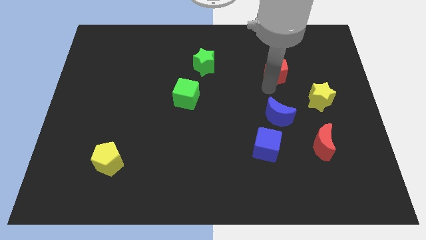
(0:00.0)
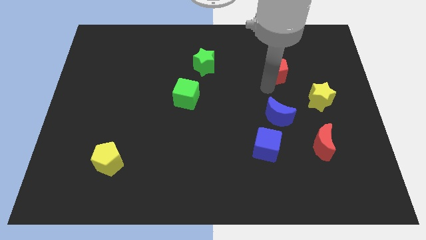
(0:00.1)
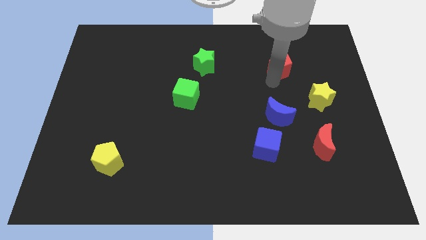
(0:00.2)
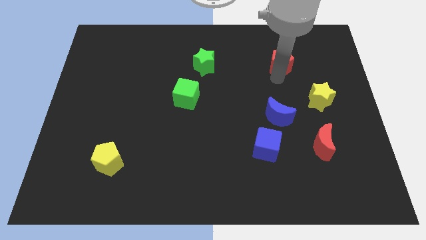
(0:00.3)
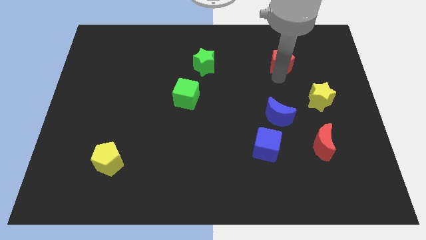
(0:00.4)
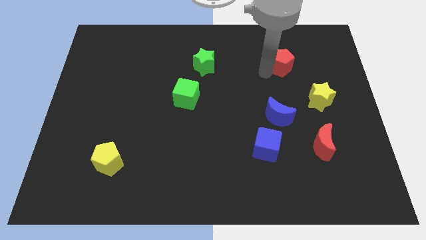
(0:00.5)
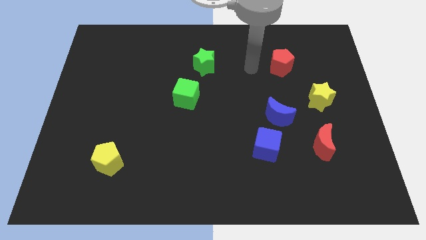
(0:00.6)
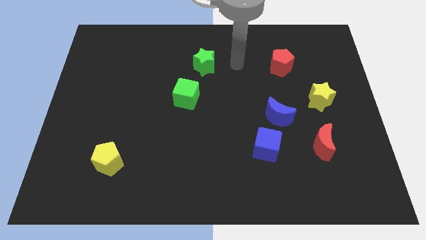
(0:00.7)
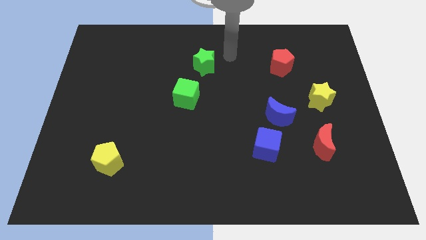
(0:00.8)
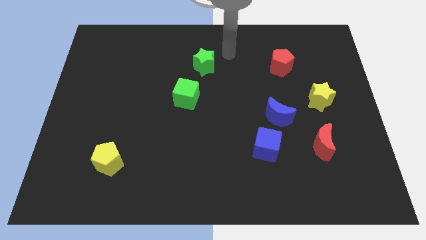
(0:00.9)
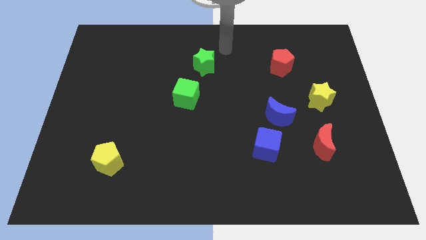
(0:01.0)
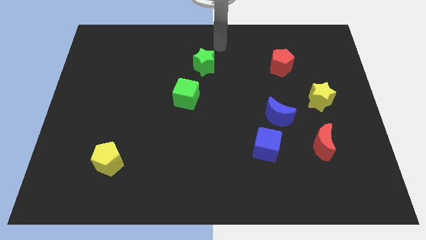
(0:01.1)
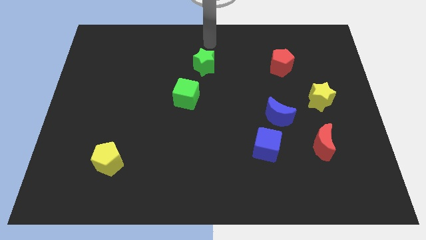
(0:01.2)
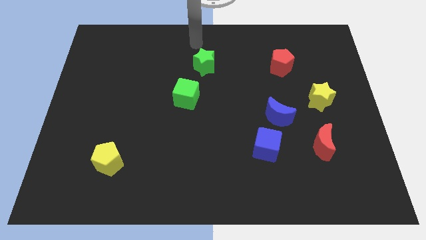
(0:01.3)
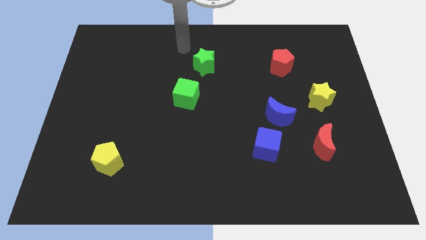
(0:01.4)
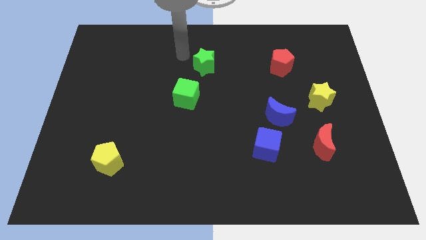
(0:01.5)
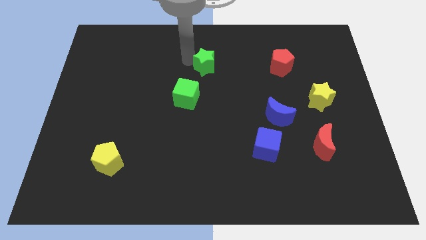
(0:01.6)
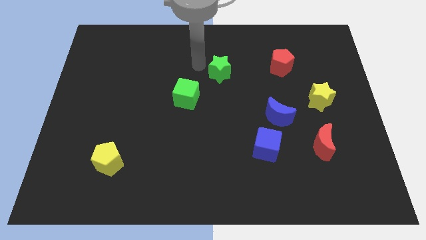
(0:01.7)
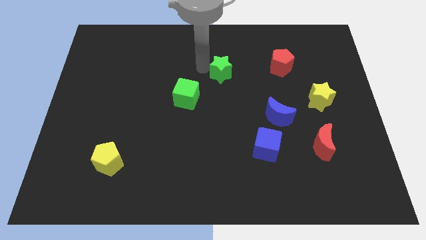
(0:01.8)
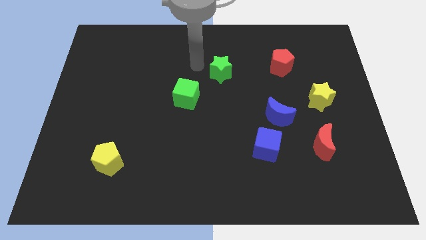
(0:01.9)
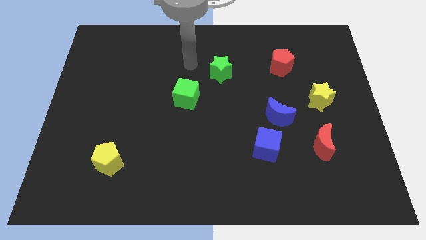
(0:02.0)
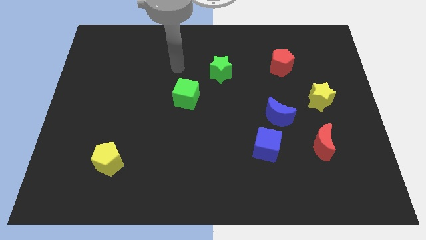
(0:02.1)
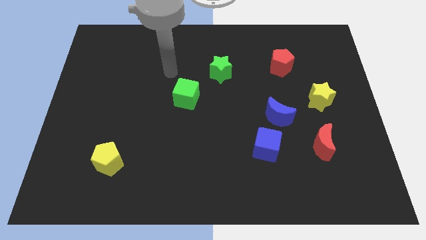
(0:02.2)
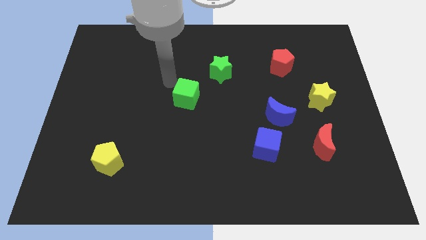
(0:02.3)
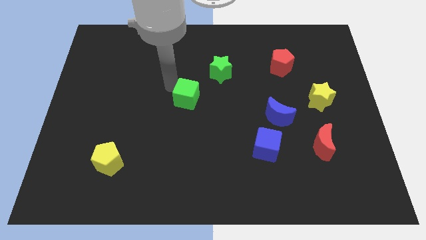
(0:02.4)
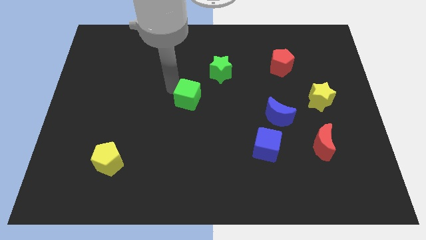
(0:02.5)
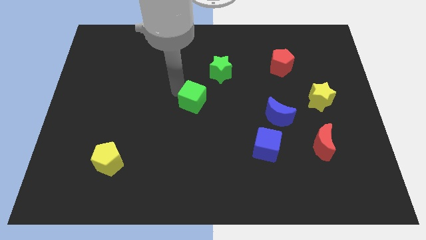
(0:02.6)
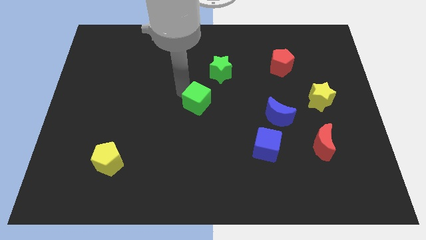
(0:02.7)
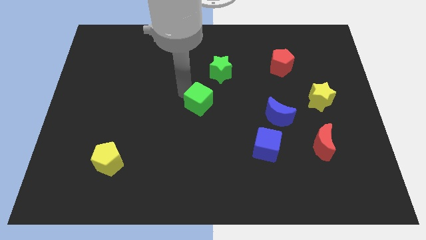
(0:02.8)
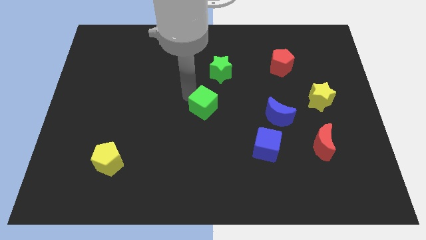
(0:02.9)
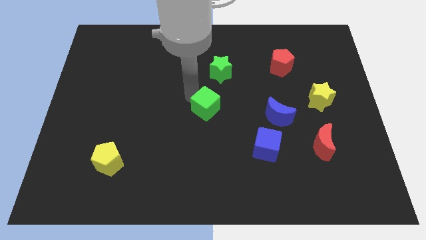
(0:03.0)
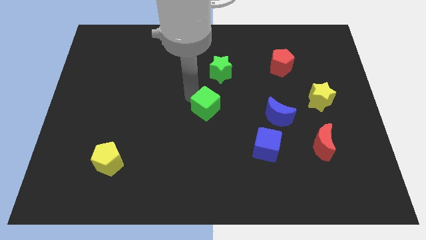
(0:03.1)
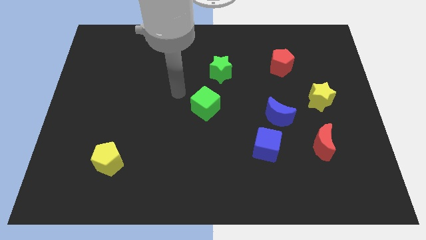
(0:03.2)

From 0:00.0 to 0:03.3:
push green cube slightly towards left

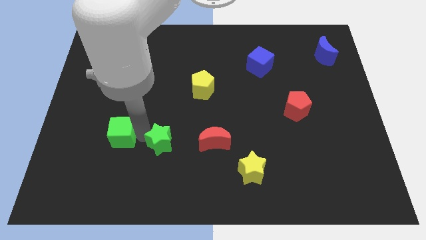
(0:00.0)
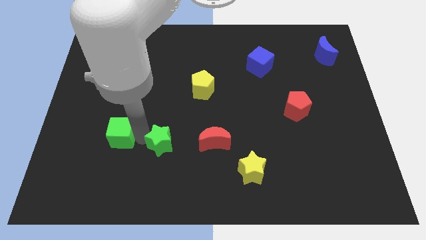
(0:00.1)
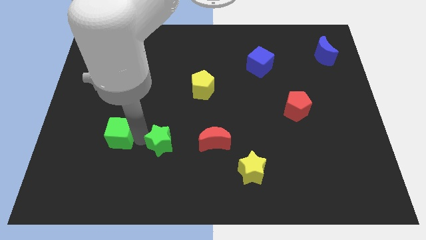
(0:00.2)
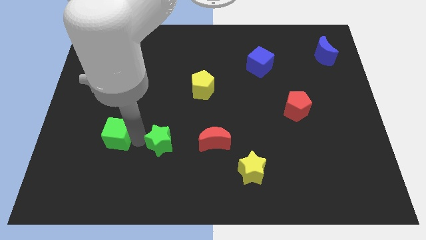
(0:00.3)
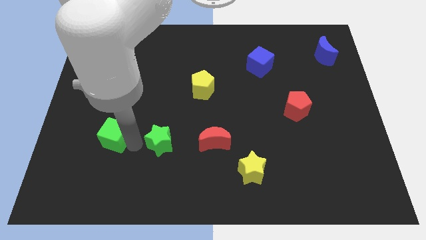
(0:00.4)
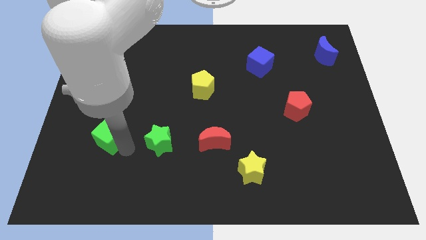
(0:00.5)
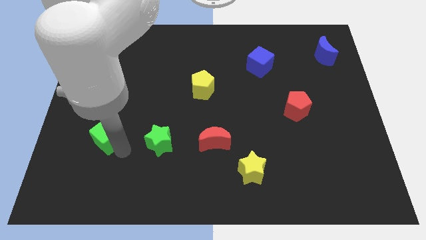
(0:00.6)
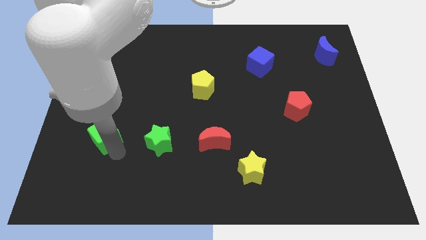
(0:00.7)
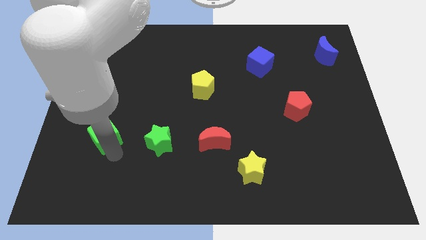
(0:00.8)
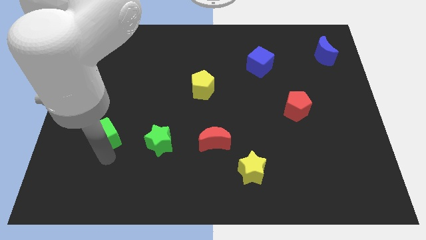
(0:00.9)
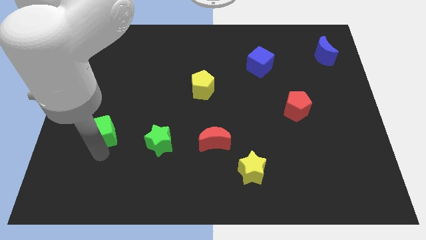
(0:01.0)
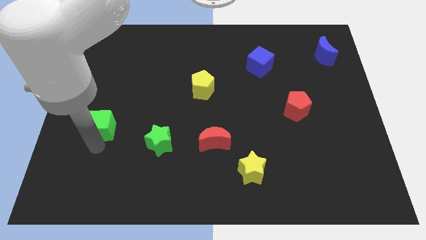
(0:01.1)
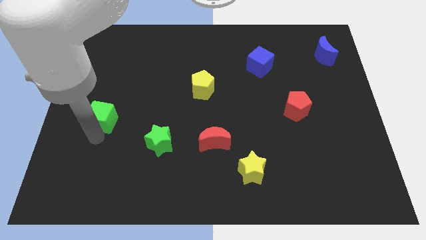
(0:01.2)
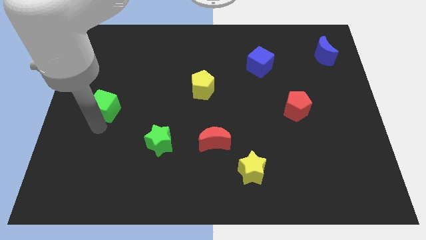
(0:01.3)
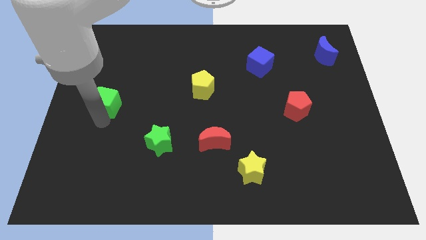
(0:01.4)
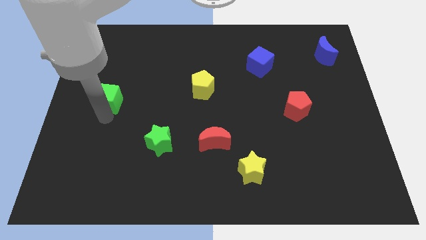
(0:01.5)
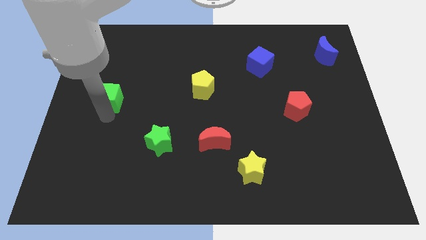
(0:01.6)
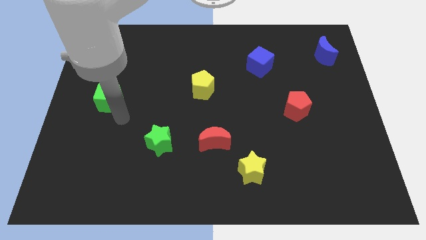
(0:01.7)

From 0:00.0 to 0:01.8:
move the green cube to the middle center of the board

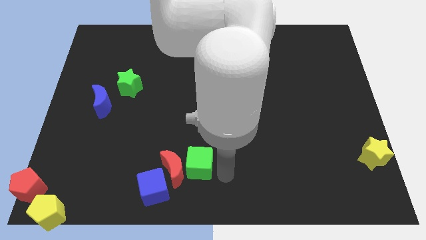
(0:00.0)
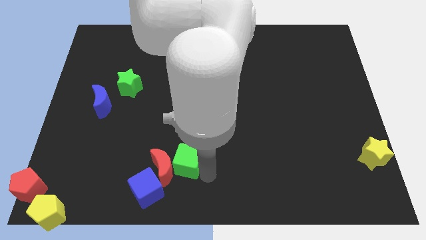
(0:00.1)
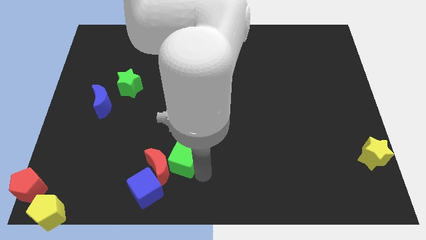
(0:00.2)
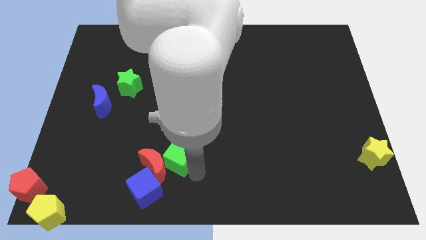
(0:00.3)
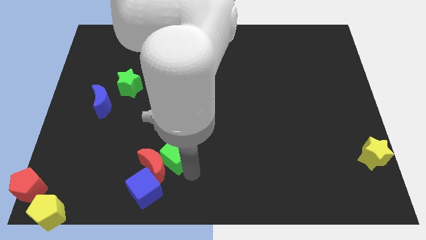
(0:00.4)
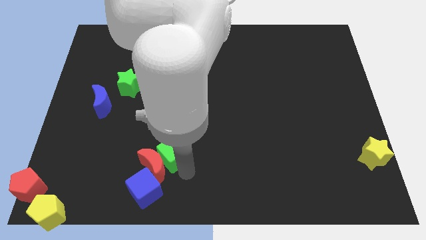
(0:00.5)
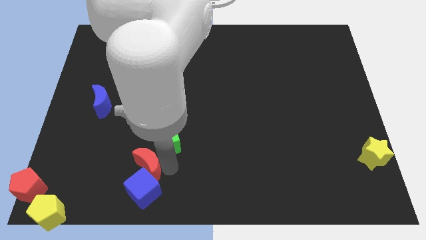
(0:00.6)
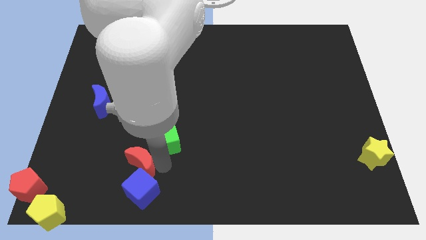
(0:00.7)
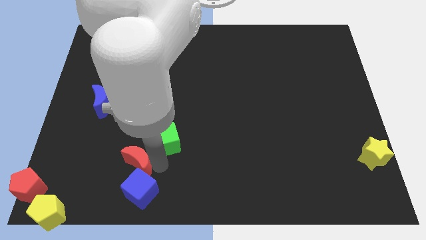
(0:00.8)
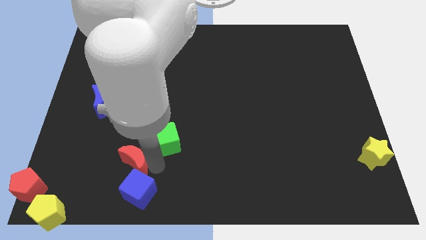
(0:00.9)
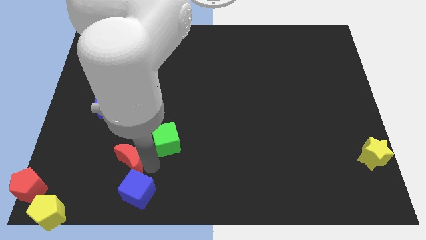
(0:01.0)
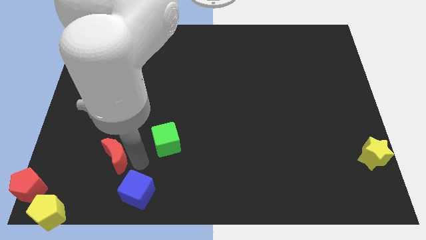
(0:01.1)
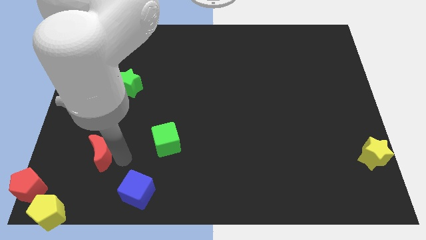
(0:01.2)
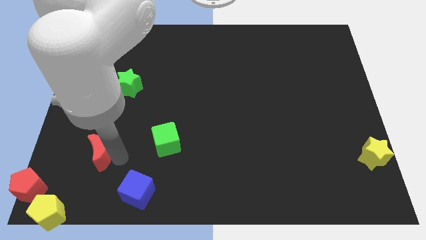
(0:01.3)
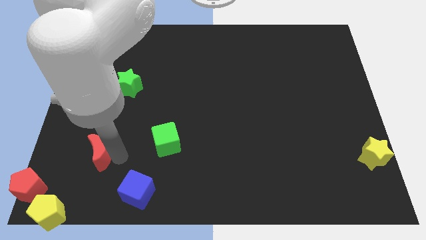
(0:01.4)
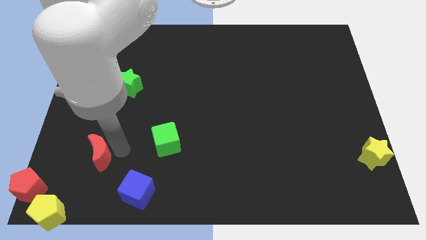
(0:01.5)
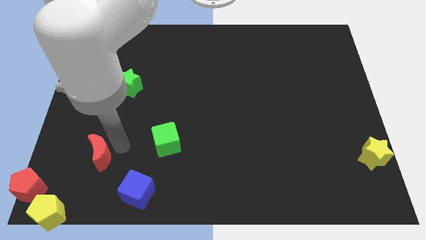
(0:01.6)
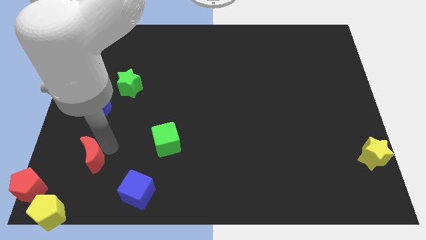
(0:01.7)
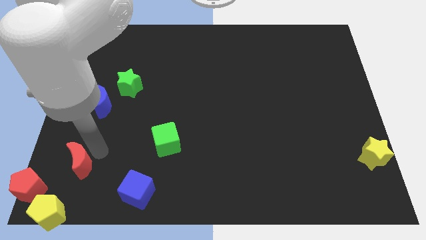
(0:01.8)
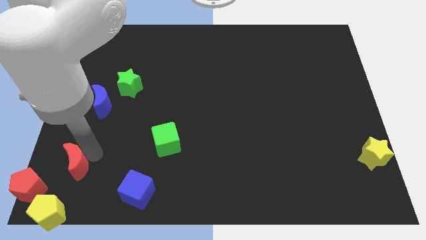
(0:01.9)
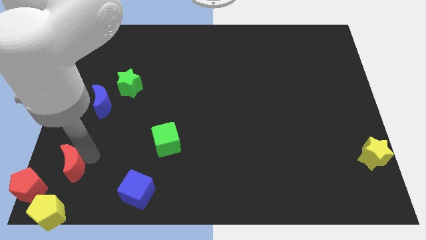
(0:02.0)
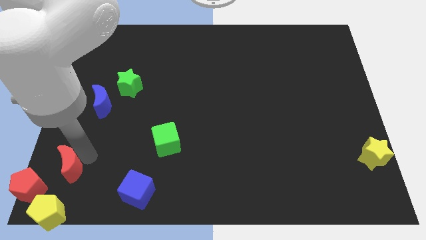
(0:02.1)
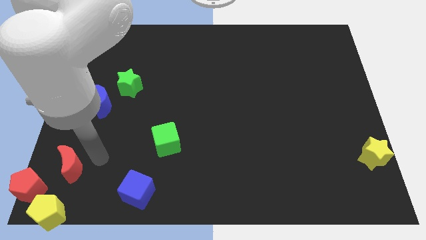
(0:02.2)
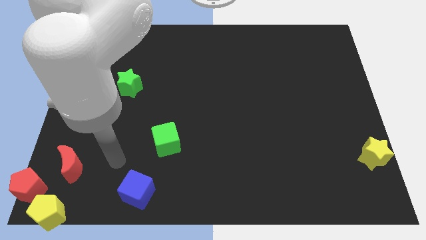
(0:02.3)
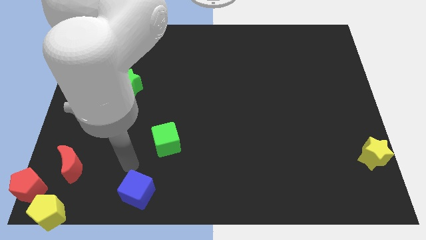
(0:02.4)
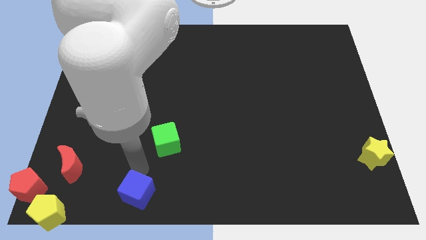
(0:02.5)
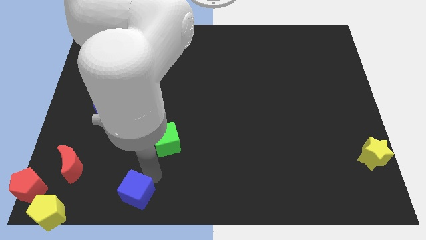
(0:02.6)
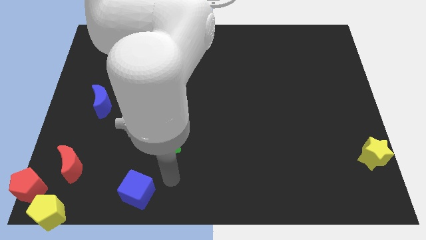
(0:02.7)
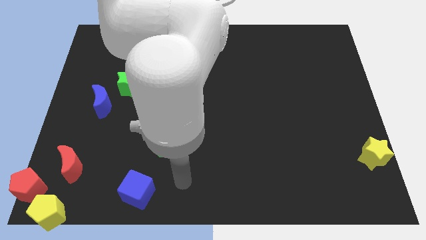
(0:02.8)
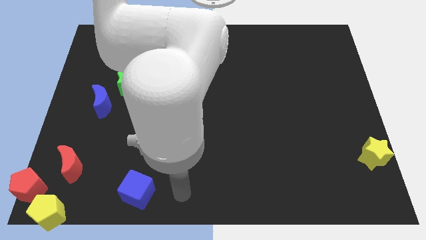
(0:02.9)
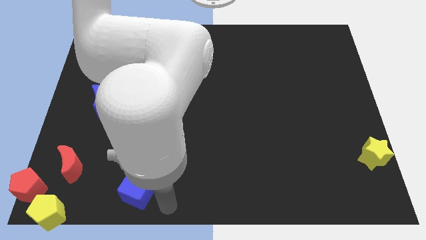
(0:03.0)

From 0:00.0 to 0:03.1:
move red moon towards red pentagon

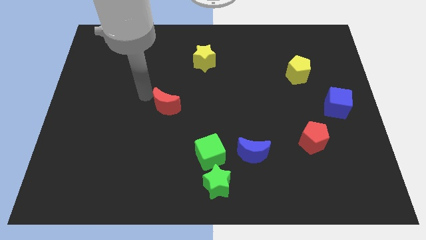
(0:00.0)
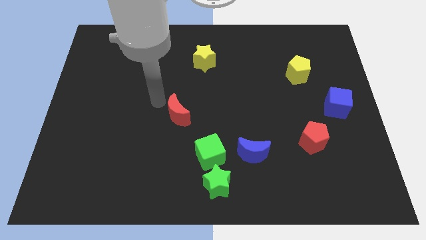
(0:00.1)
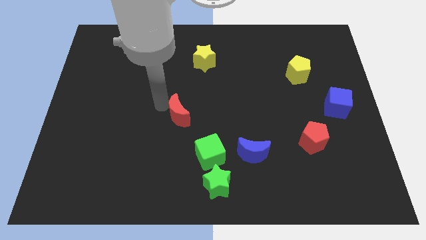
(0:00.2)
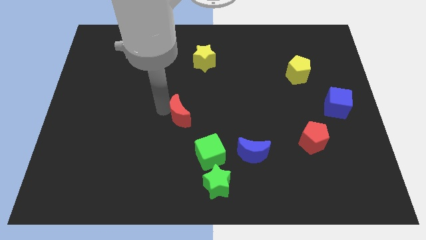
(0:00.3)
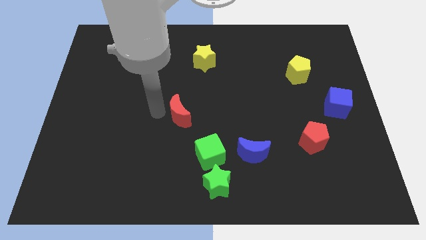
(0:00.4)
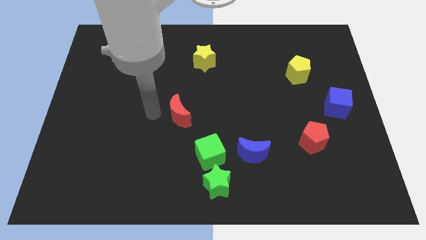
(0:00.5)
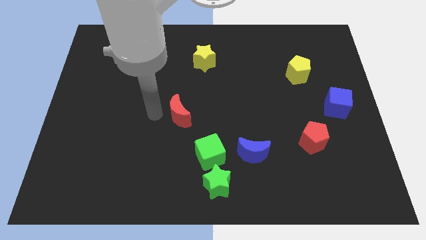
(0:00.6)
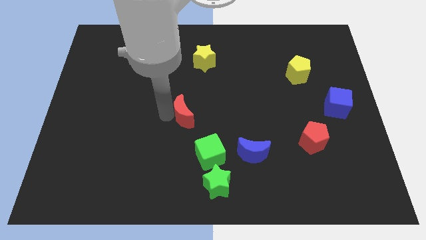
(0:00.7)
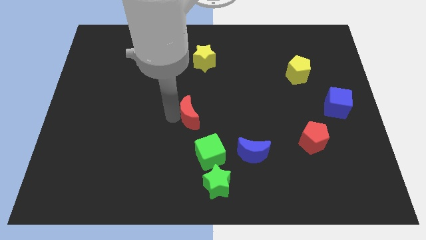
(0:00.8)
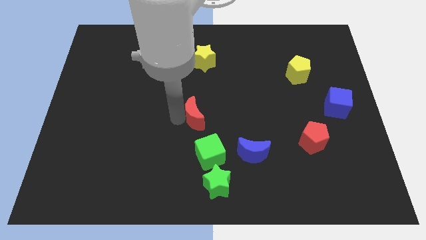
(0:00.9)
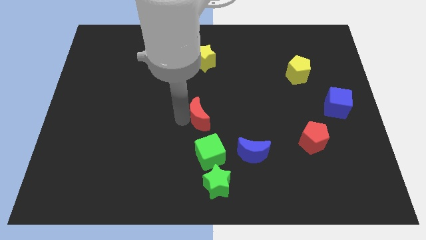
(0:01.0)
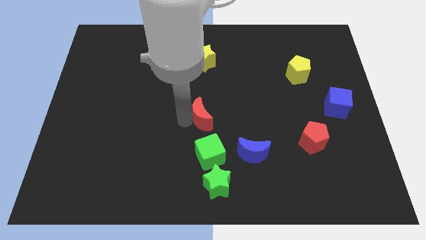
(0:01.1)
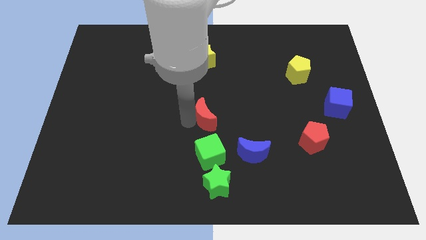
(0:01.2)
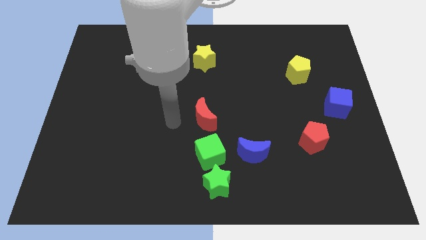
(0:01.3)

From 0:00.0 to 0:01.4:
place the red crescent vertically below the yellow star
